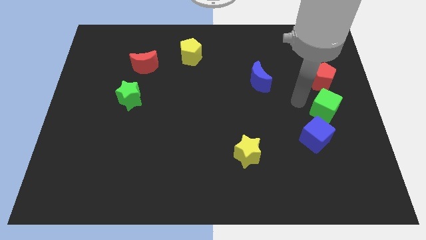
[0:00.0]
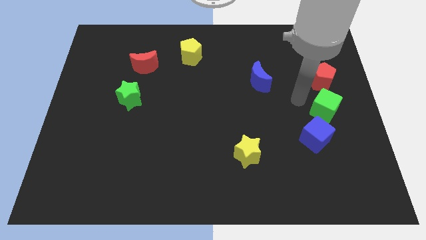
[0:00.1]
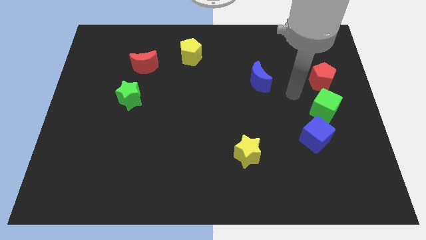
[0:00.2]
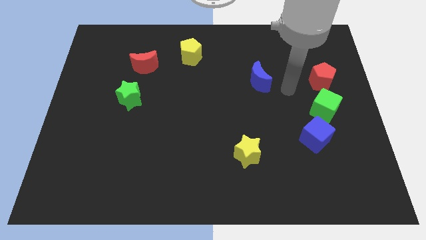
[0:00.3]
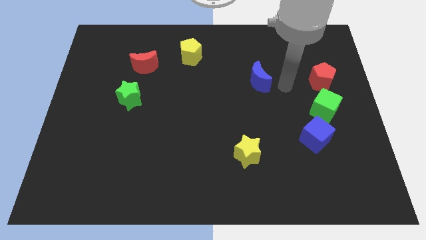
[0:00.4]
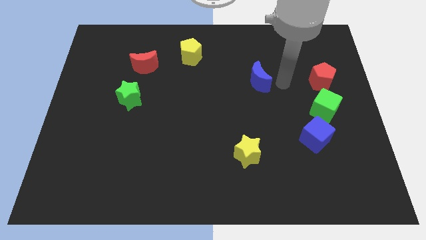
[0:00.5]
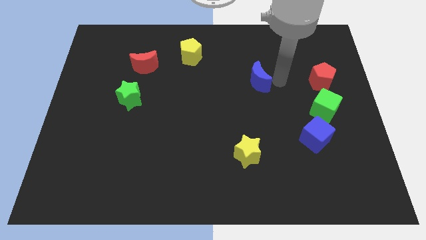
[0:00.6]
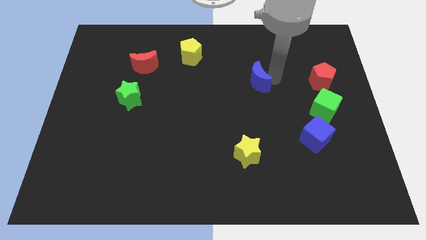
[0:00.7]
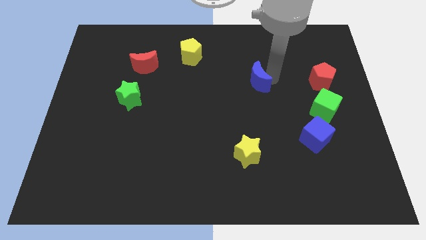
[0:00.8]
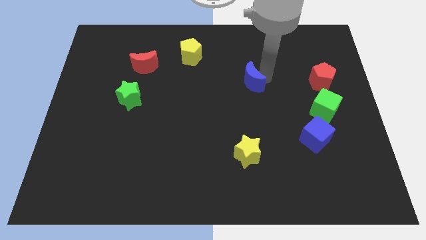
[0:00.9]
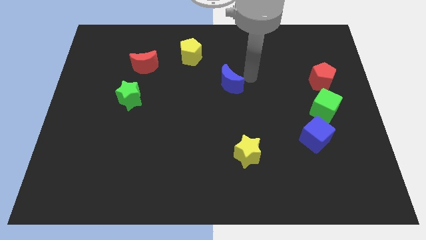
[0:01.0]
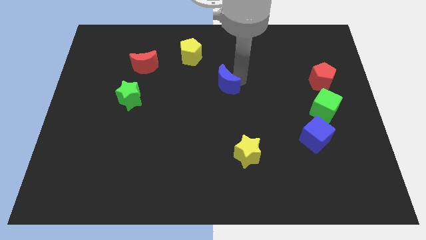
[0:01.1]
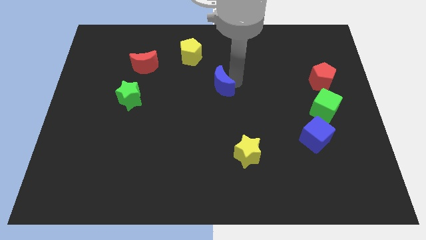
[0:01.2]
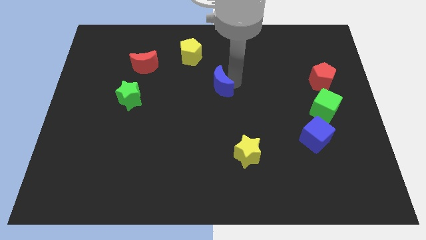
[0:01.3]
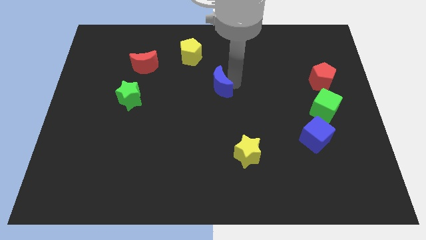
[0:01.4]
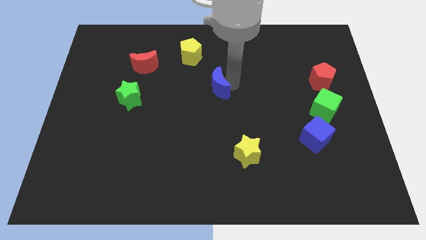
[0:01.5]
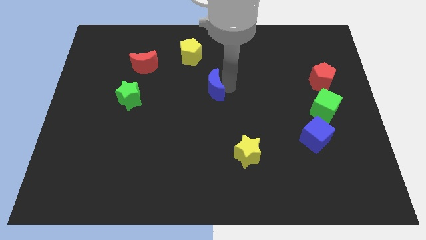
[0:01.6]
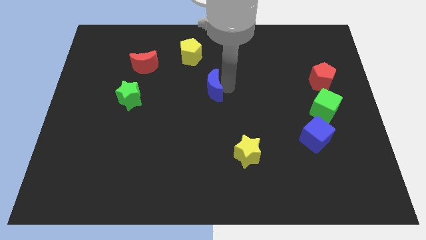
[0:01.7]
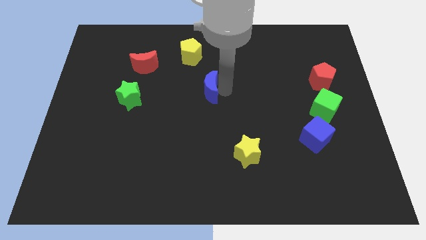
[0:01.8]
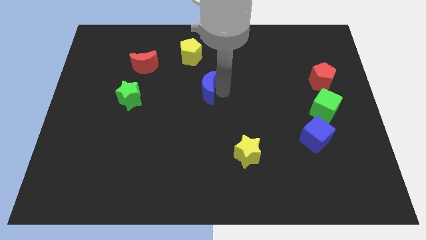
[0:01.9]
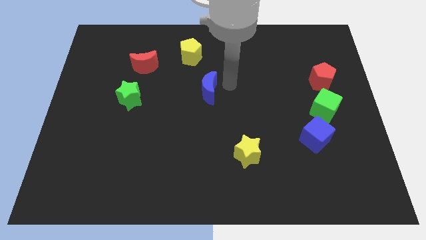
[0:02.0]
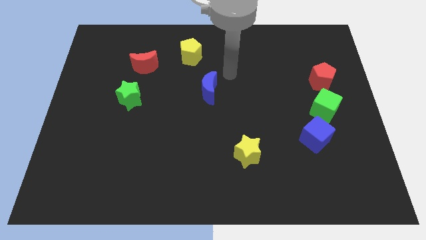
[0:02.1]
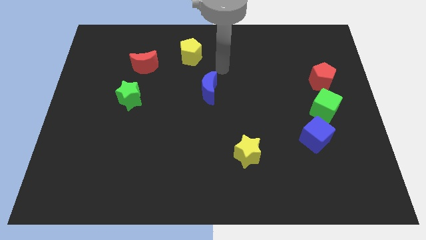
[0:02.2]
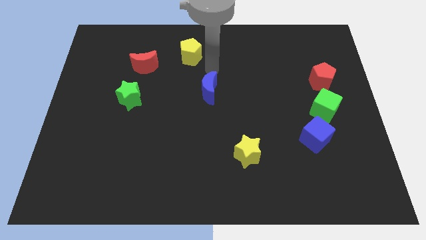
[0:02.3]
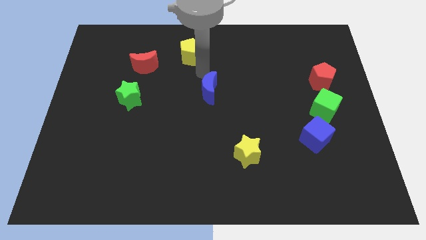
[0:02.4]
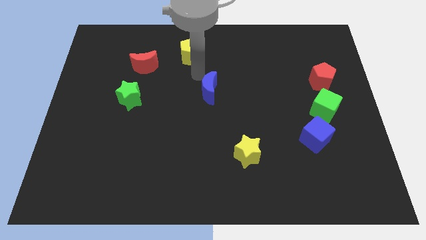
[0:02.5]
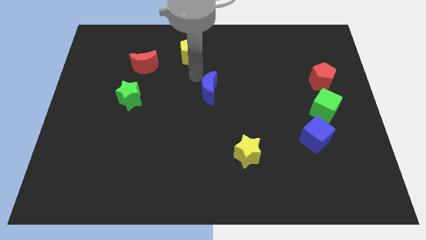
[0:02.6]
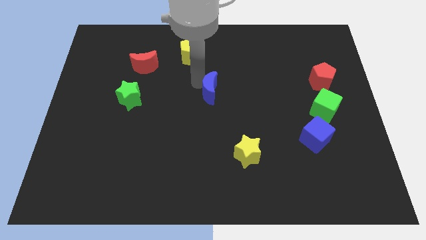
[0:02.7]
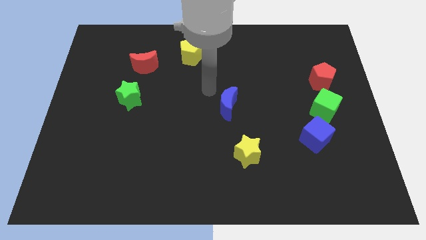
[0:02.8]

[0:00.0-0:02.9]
put the blue moon at the center of the board

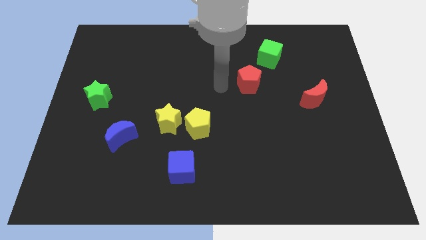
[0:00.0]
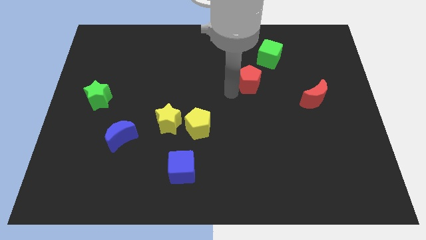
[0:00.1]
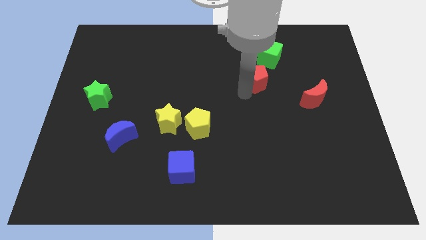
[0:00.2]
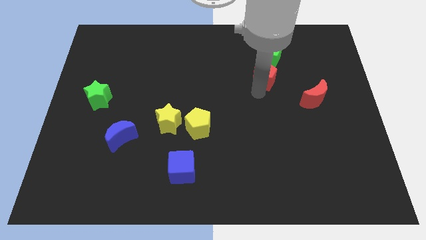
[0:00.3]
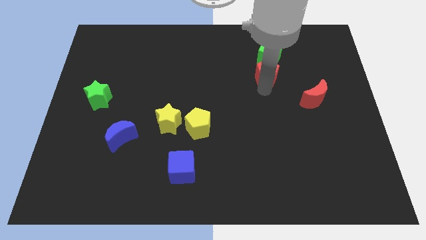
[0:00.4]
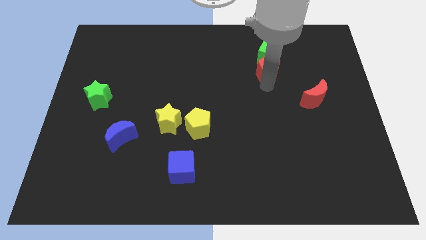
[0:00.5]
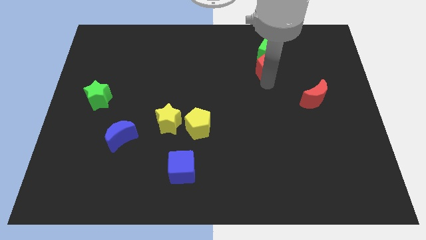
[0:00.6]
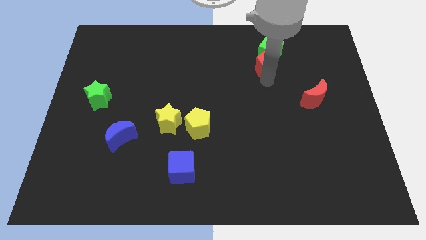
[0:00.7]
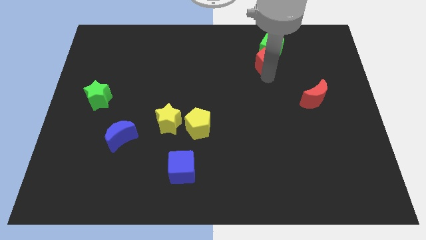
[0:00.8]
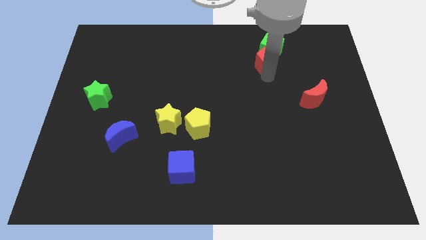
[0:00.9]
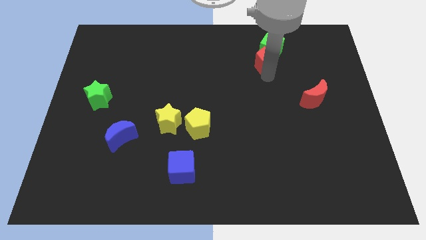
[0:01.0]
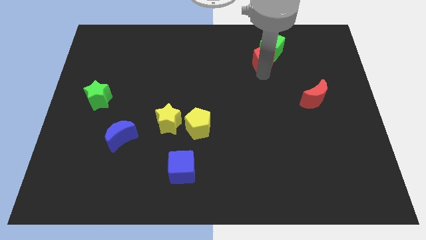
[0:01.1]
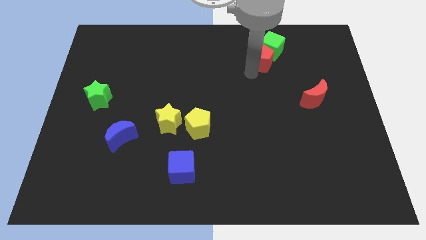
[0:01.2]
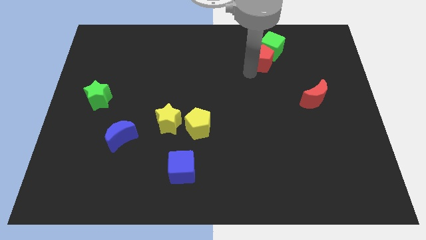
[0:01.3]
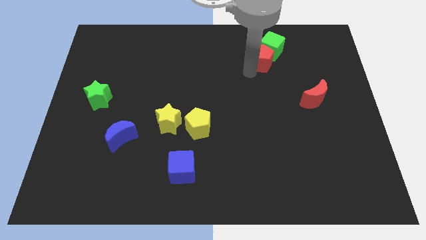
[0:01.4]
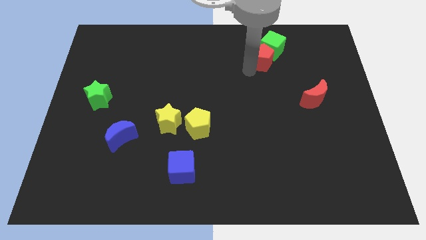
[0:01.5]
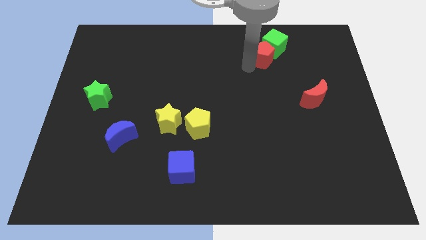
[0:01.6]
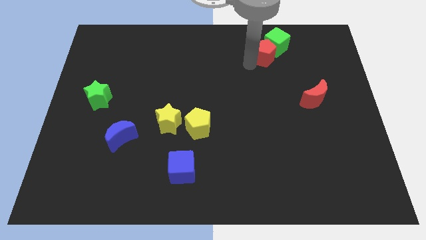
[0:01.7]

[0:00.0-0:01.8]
push the red pentagon into the green cube

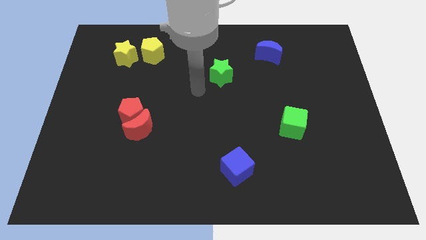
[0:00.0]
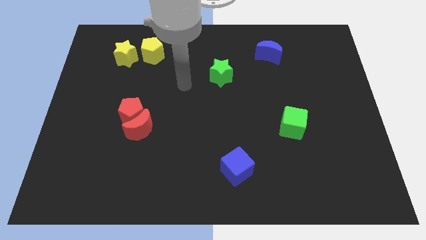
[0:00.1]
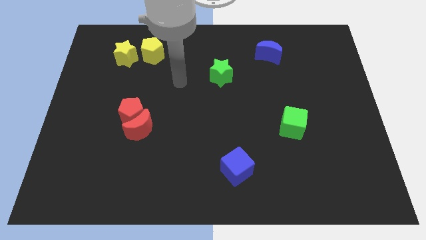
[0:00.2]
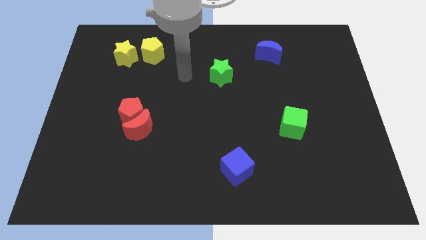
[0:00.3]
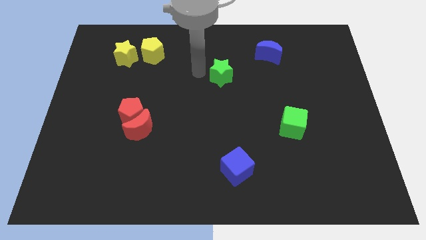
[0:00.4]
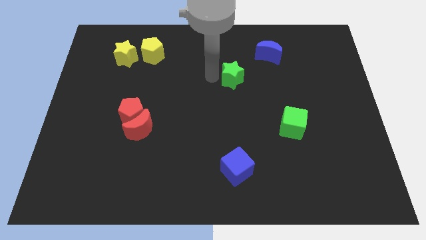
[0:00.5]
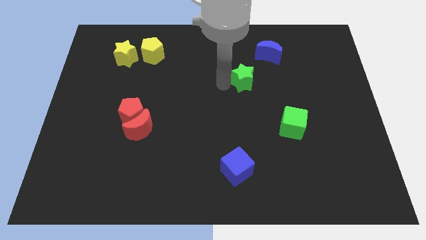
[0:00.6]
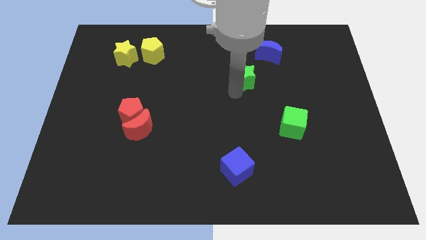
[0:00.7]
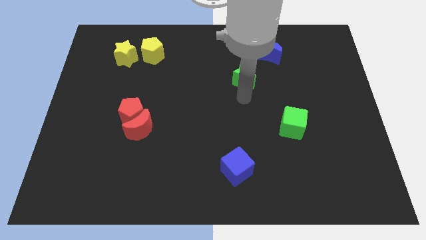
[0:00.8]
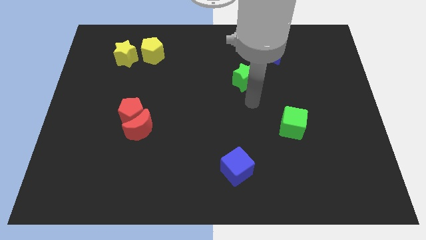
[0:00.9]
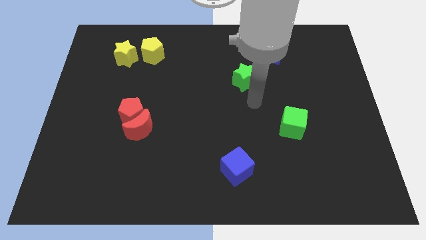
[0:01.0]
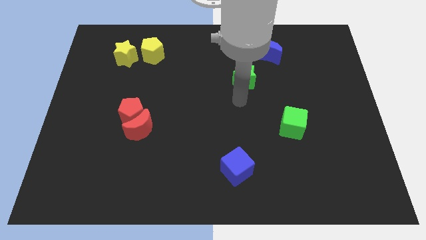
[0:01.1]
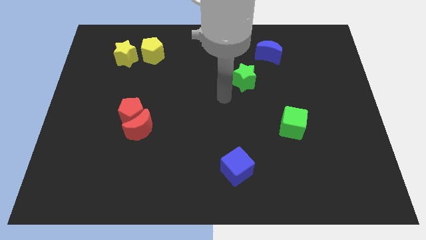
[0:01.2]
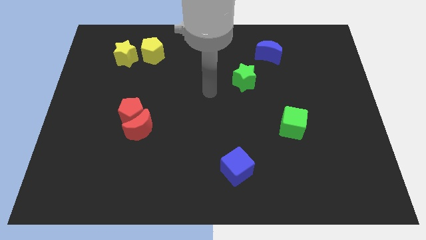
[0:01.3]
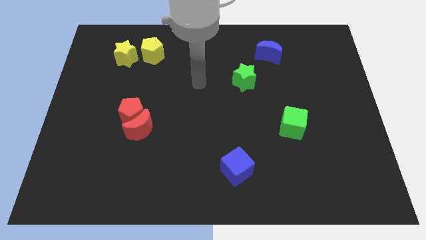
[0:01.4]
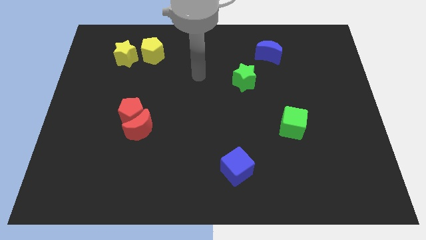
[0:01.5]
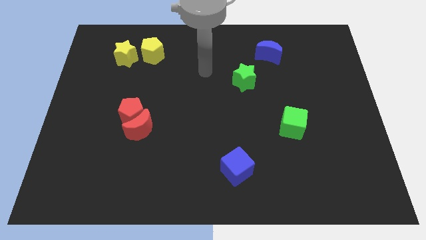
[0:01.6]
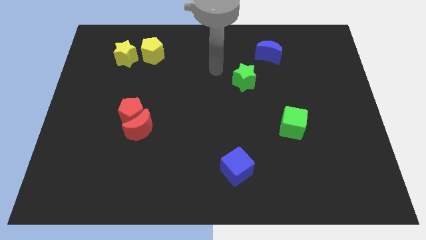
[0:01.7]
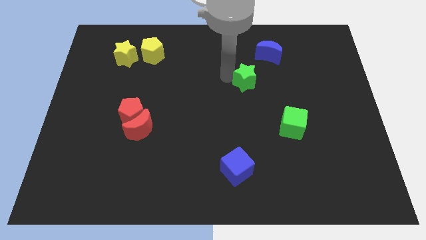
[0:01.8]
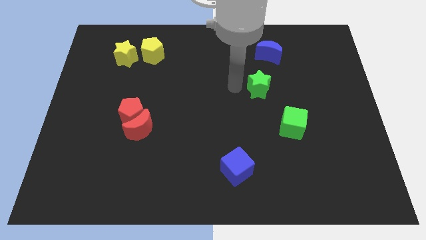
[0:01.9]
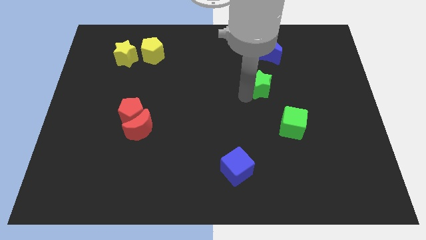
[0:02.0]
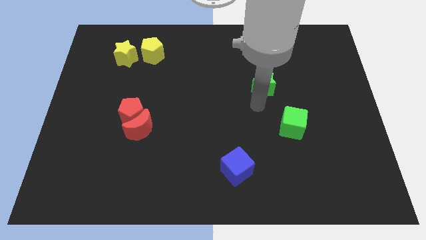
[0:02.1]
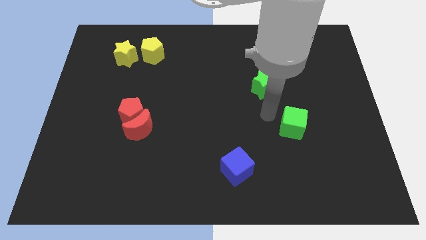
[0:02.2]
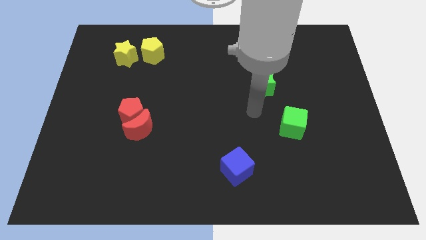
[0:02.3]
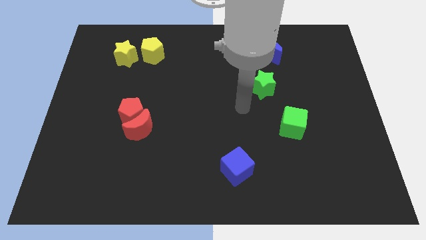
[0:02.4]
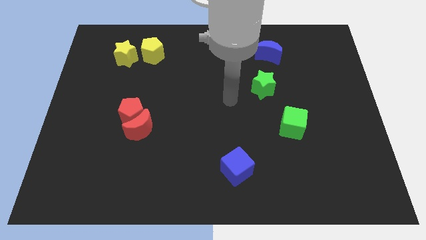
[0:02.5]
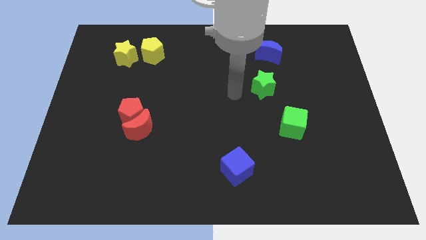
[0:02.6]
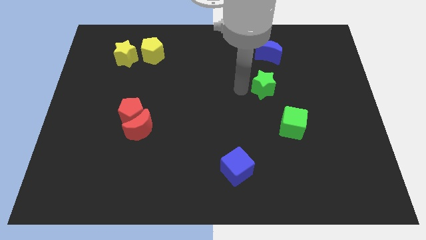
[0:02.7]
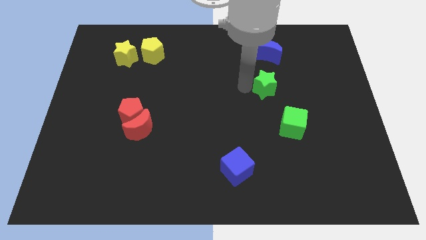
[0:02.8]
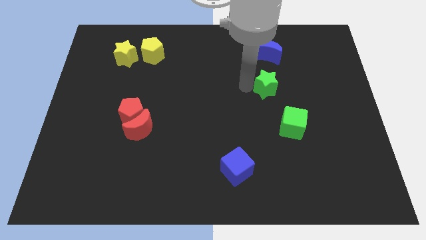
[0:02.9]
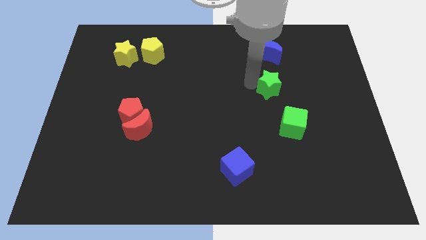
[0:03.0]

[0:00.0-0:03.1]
move the green star below the blue moon

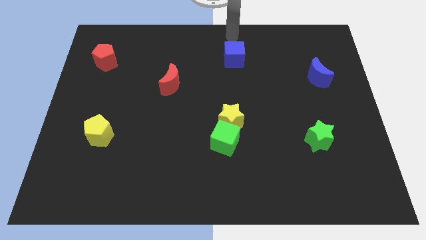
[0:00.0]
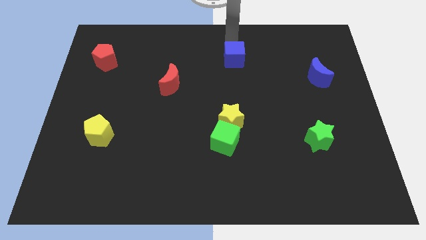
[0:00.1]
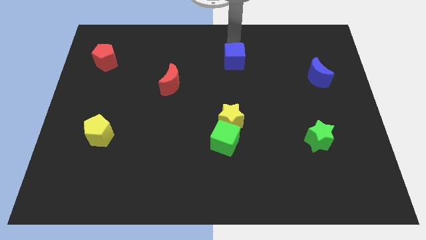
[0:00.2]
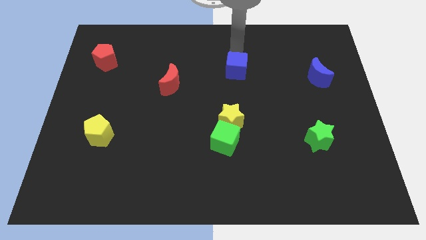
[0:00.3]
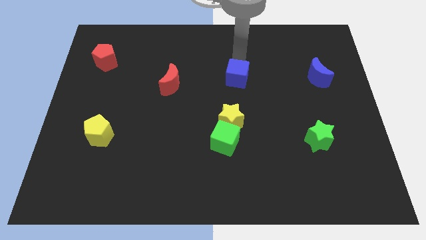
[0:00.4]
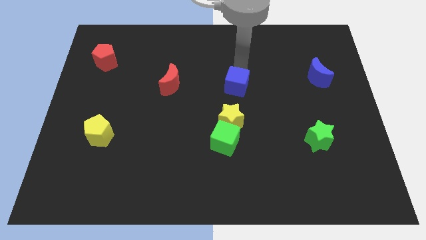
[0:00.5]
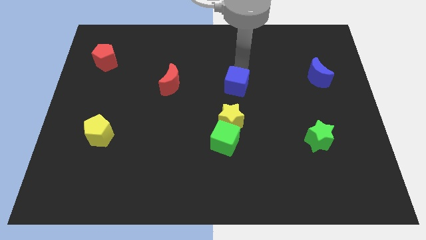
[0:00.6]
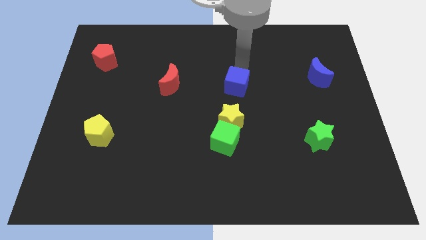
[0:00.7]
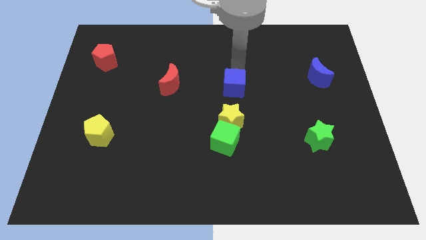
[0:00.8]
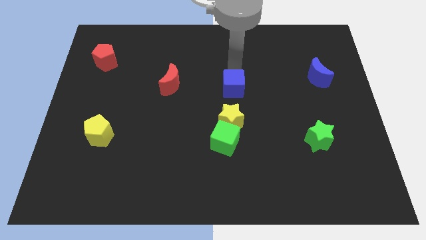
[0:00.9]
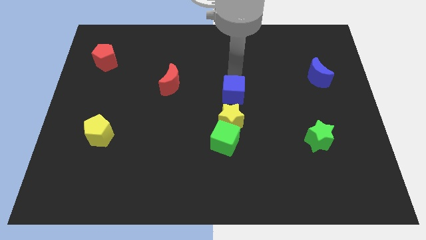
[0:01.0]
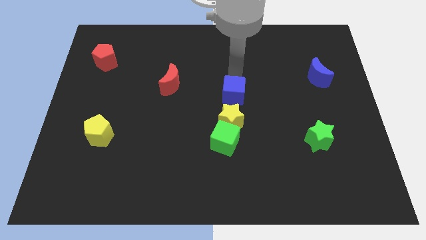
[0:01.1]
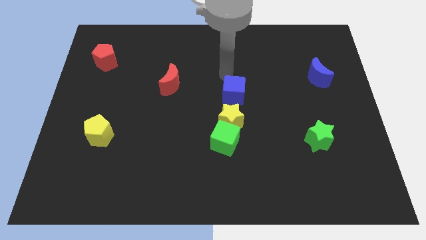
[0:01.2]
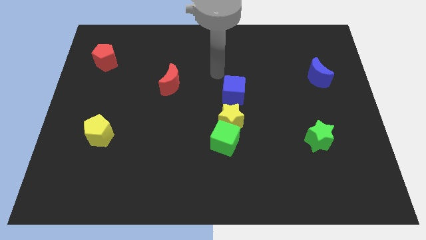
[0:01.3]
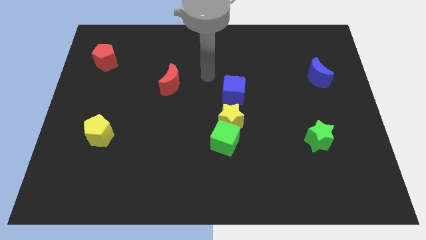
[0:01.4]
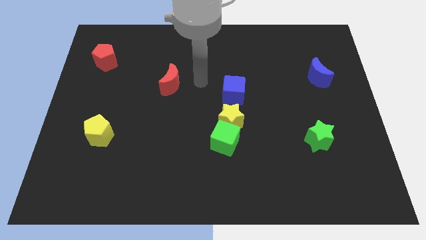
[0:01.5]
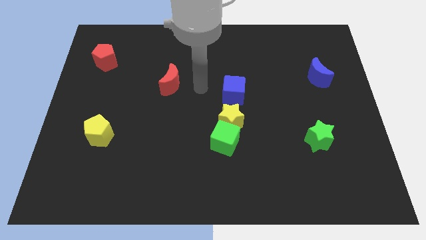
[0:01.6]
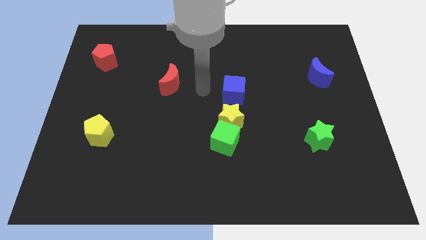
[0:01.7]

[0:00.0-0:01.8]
slide the blue cube towards the yellow star
